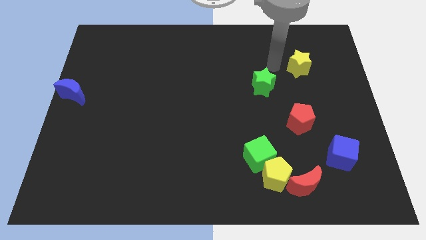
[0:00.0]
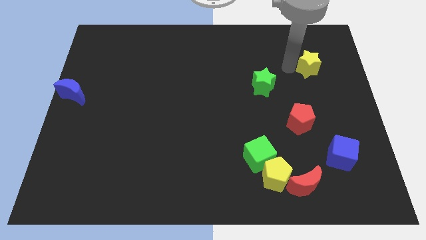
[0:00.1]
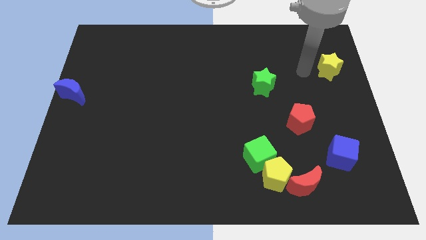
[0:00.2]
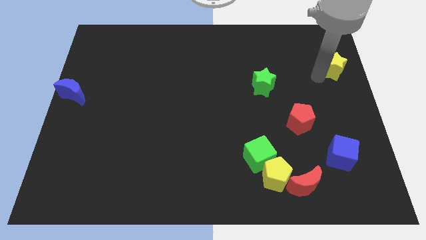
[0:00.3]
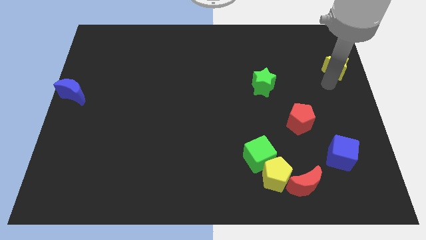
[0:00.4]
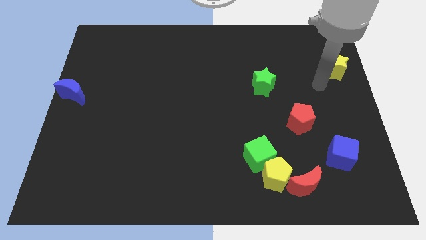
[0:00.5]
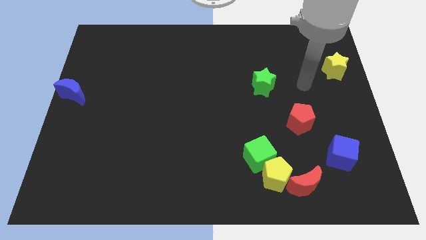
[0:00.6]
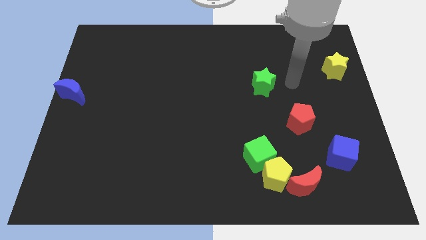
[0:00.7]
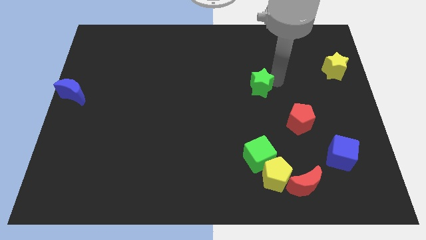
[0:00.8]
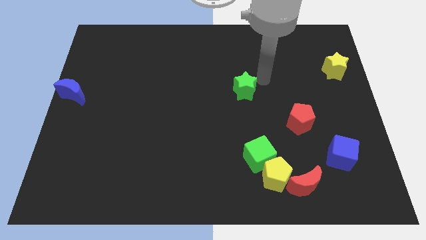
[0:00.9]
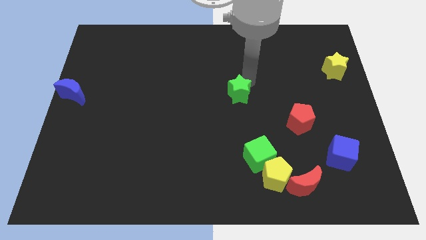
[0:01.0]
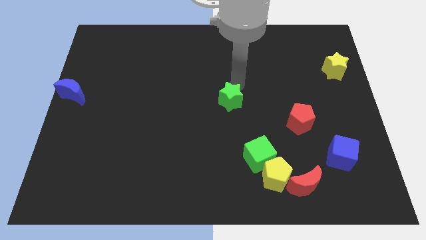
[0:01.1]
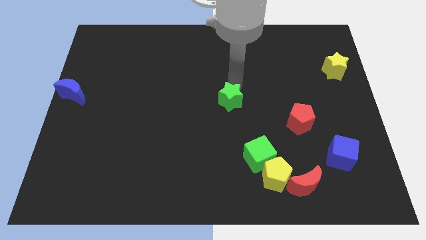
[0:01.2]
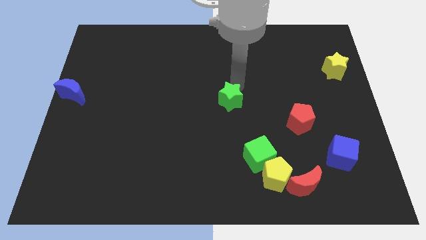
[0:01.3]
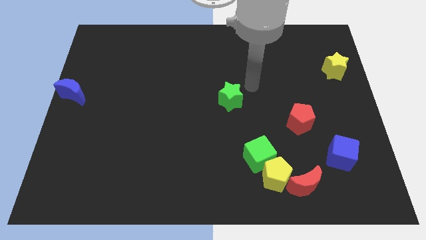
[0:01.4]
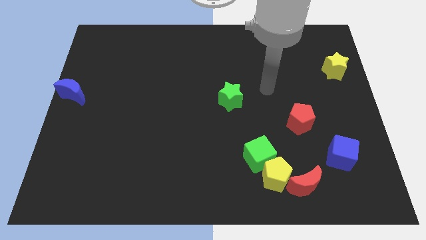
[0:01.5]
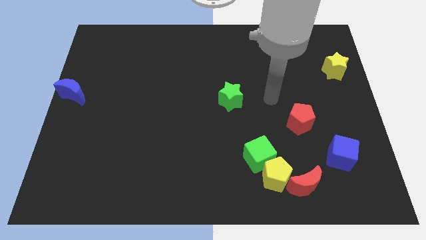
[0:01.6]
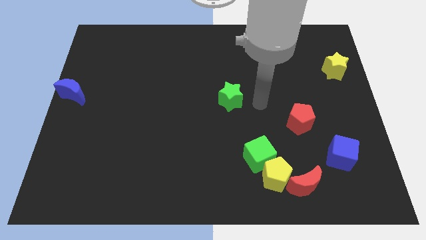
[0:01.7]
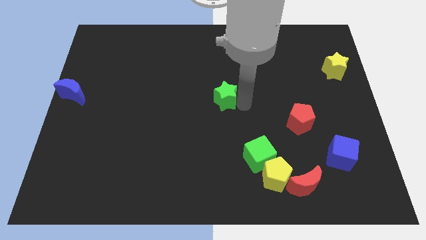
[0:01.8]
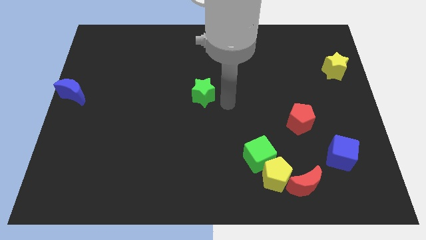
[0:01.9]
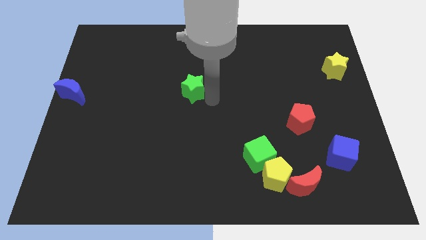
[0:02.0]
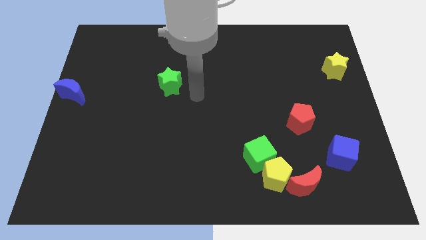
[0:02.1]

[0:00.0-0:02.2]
separate the green star and yellow star

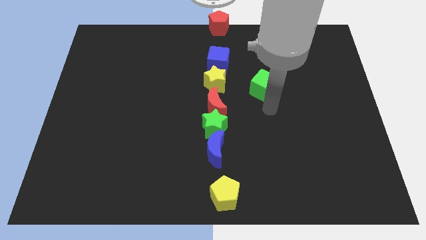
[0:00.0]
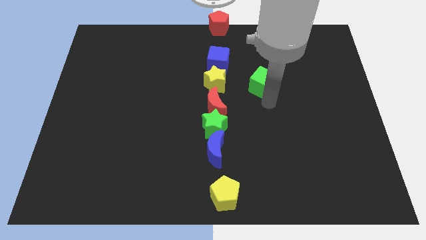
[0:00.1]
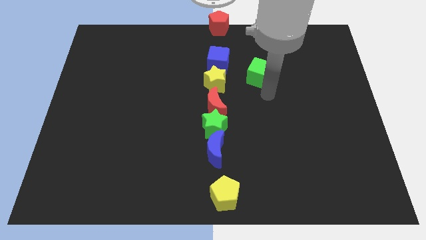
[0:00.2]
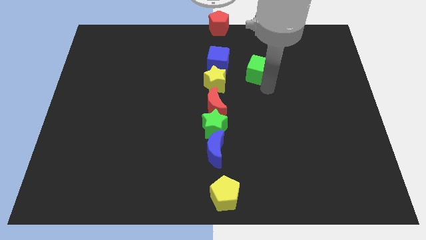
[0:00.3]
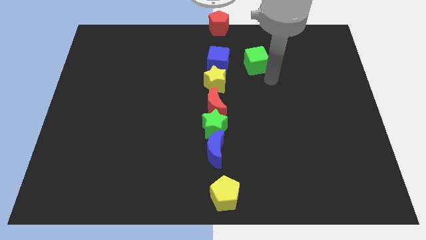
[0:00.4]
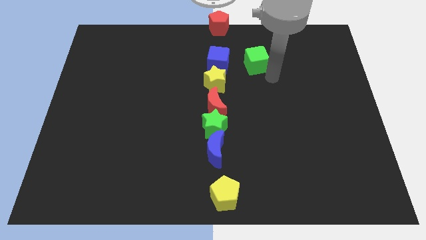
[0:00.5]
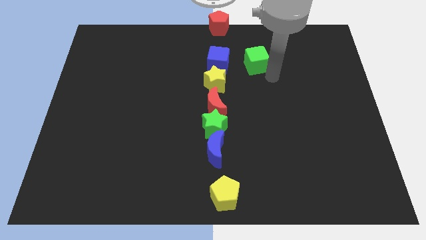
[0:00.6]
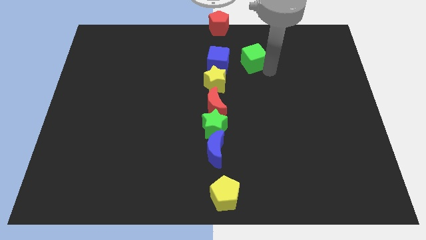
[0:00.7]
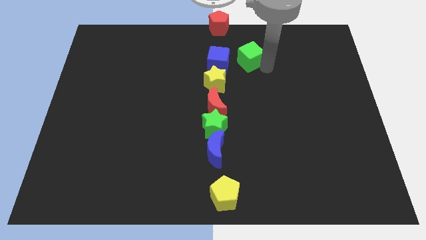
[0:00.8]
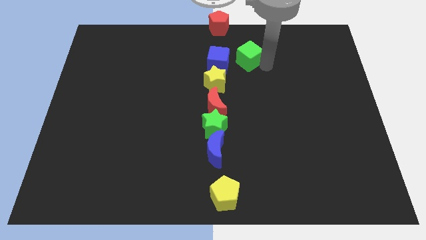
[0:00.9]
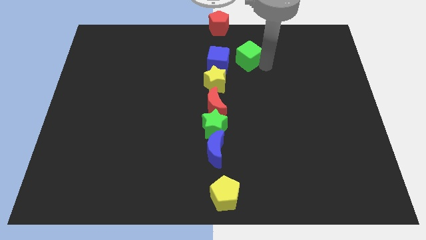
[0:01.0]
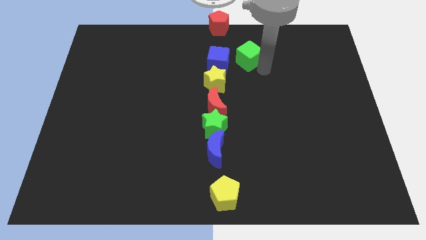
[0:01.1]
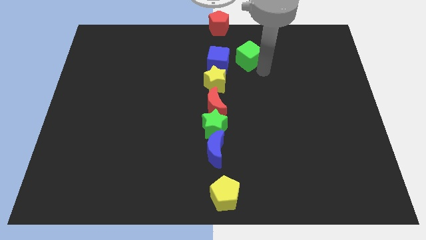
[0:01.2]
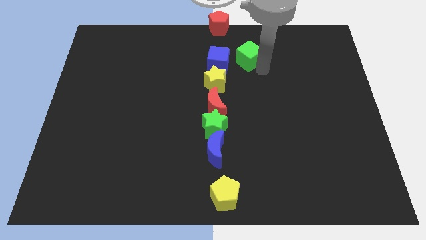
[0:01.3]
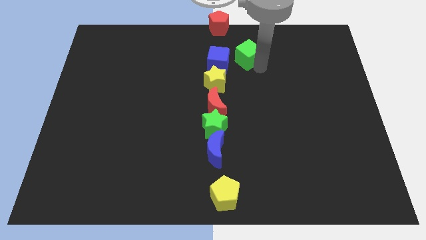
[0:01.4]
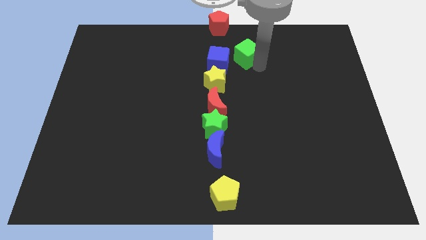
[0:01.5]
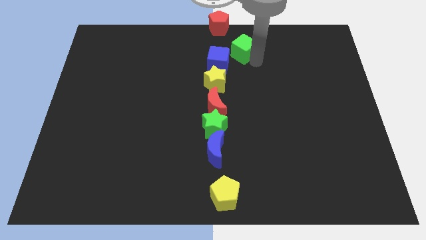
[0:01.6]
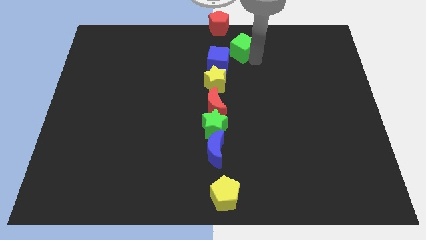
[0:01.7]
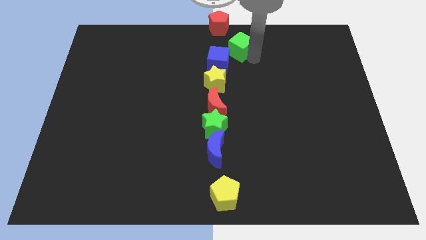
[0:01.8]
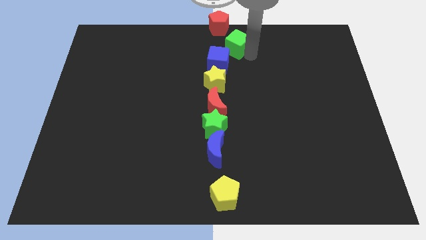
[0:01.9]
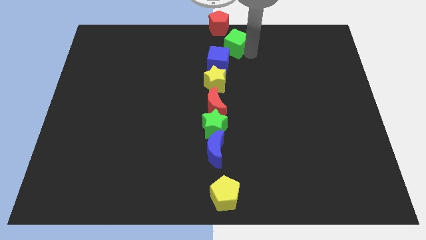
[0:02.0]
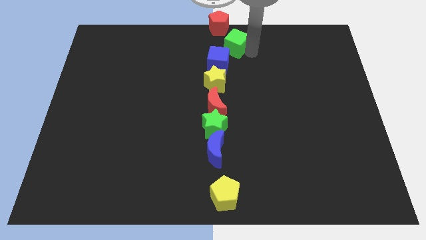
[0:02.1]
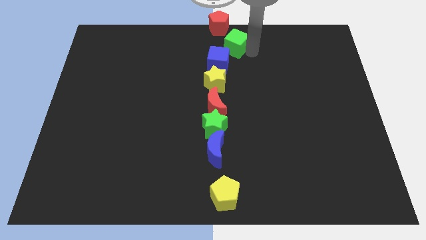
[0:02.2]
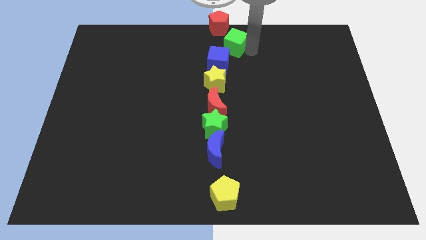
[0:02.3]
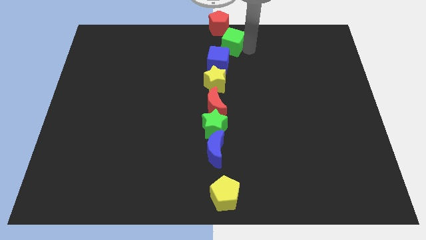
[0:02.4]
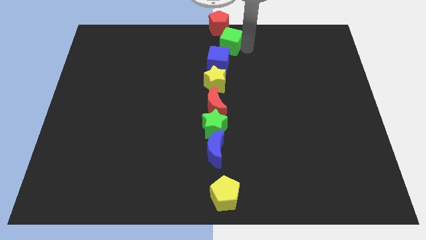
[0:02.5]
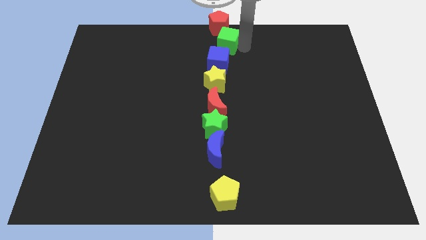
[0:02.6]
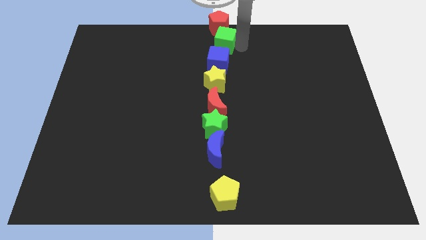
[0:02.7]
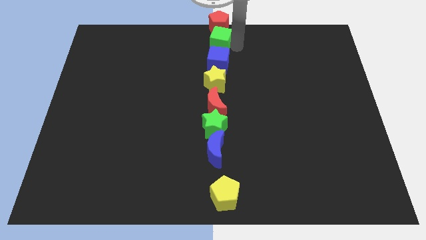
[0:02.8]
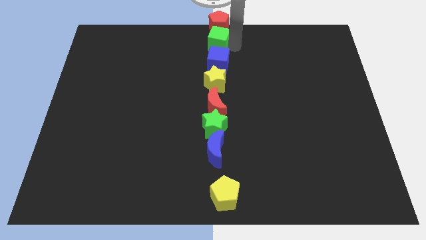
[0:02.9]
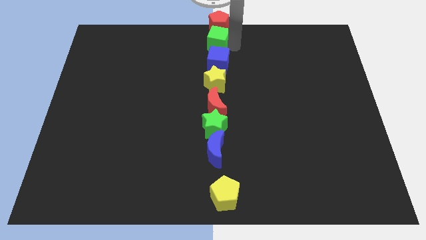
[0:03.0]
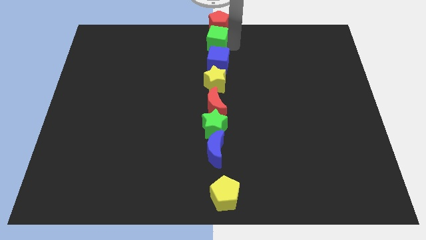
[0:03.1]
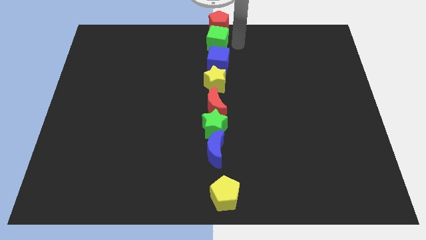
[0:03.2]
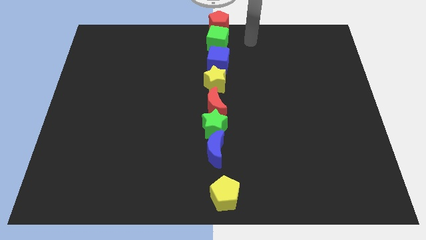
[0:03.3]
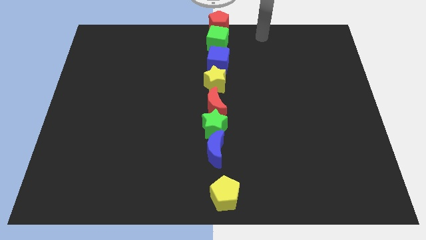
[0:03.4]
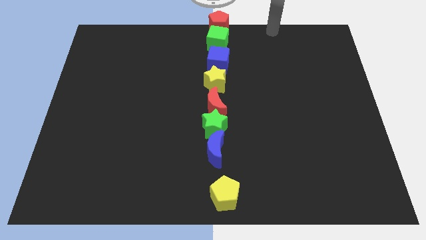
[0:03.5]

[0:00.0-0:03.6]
place the green cube between blue cube and red pentagon to from a vertical line

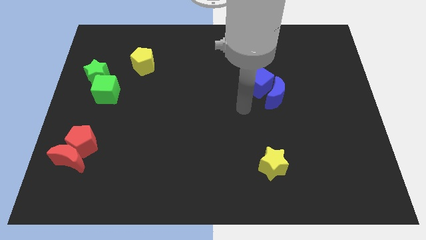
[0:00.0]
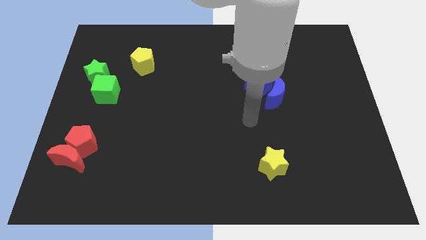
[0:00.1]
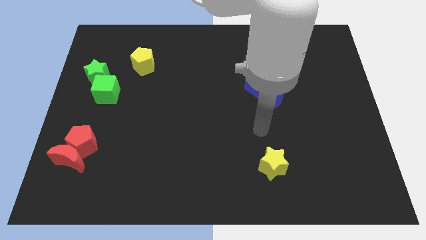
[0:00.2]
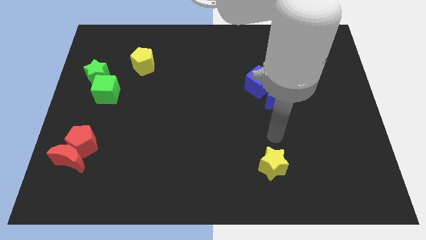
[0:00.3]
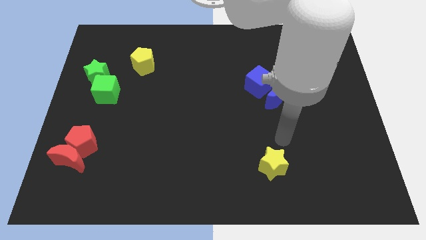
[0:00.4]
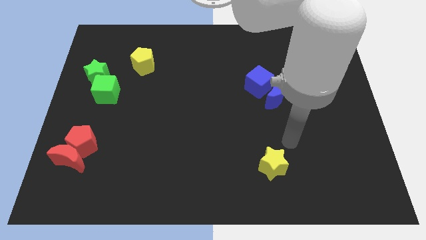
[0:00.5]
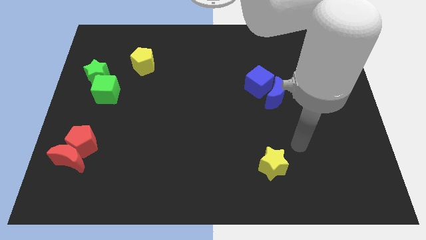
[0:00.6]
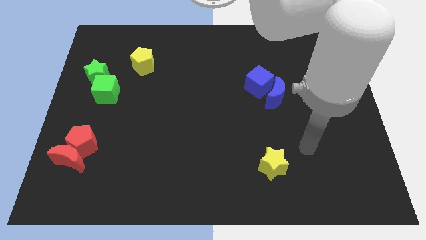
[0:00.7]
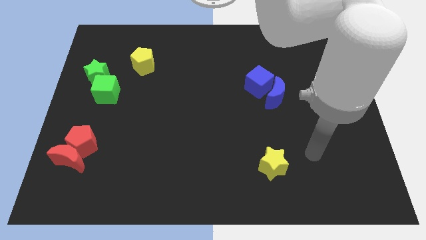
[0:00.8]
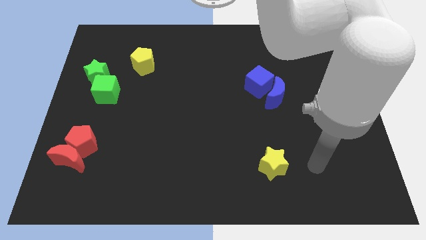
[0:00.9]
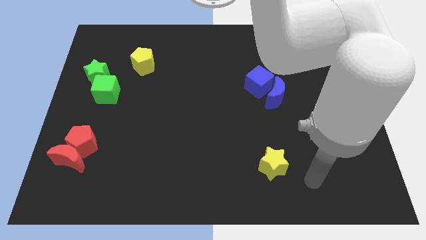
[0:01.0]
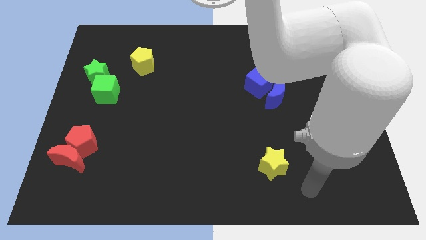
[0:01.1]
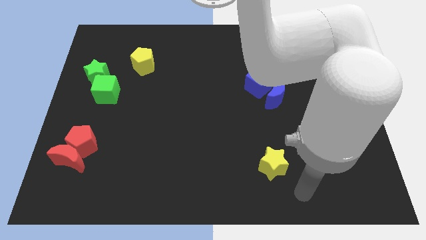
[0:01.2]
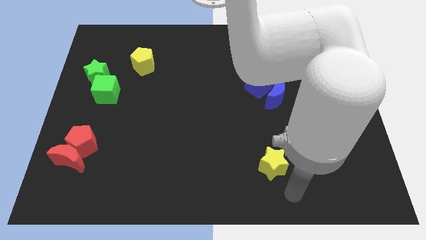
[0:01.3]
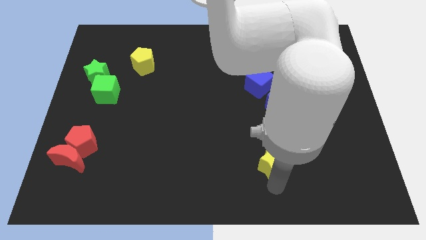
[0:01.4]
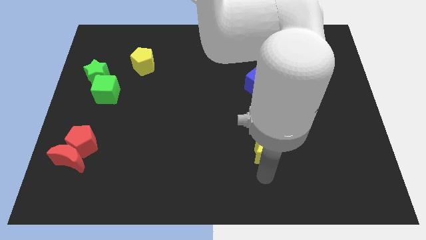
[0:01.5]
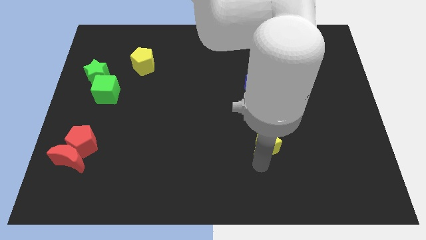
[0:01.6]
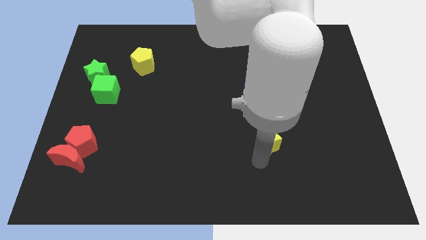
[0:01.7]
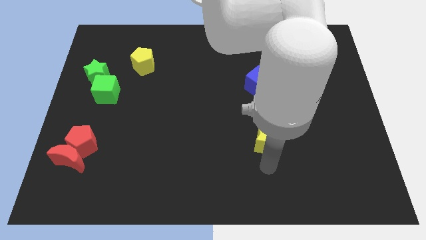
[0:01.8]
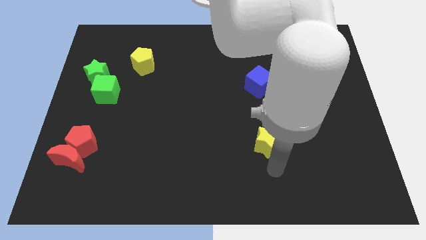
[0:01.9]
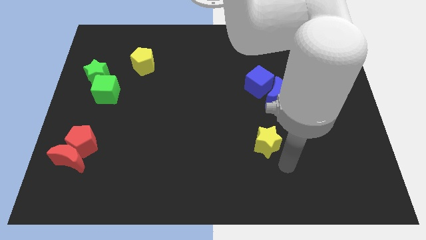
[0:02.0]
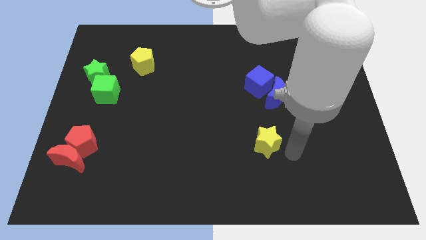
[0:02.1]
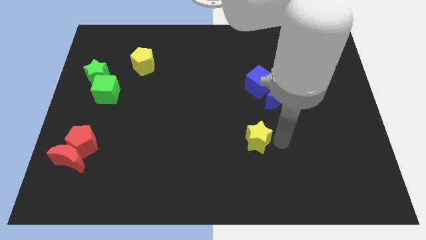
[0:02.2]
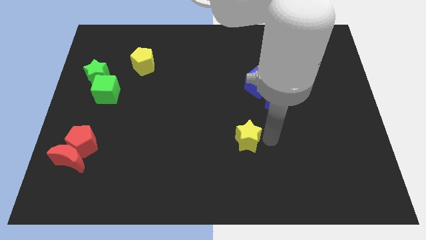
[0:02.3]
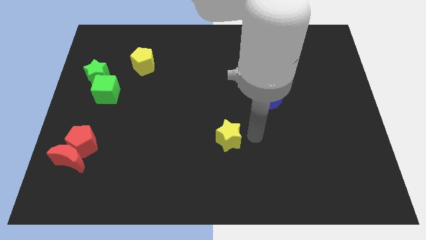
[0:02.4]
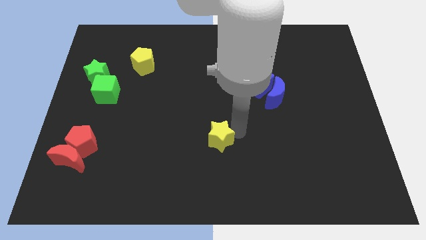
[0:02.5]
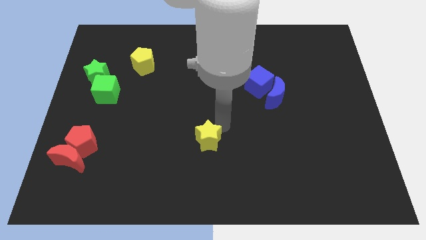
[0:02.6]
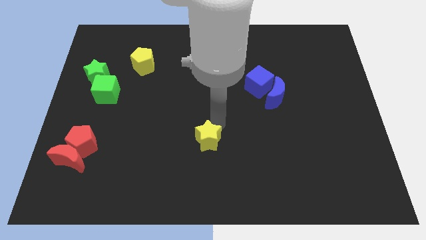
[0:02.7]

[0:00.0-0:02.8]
push the yellow star to the left of the board

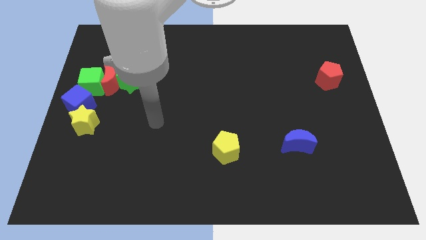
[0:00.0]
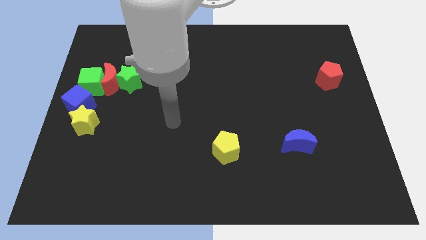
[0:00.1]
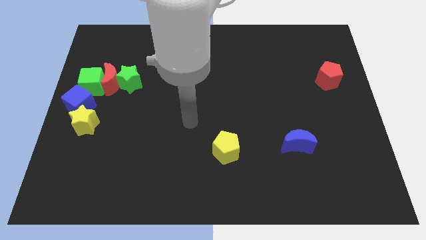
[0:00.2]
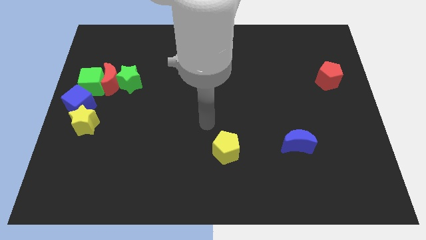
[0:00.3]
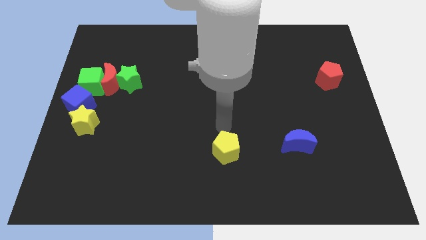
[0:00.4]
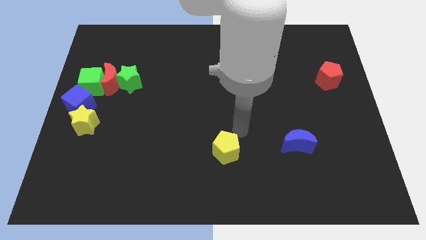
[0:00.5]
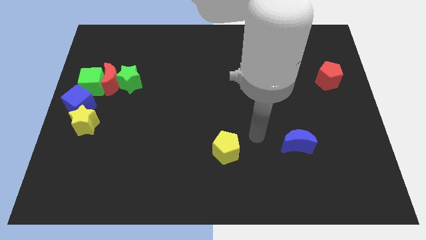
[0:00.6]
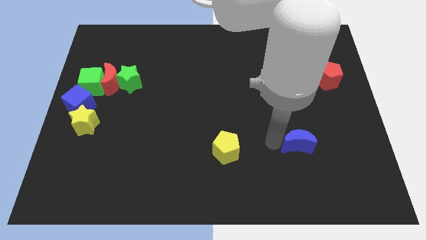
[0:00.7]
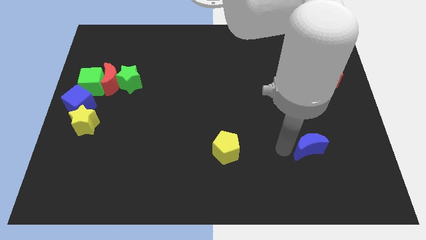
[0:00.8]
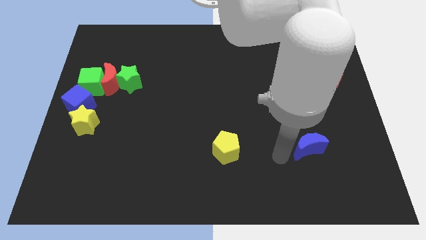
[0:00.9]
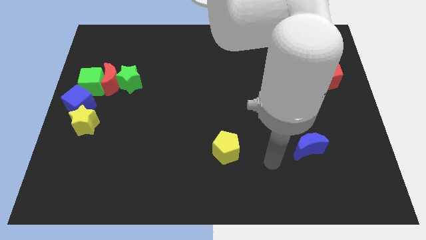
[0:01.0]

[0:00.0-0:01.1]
slightly move the blue moon towards the right
